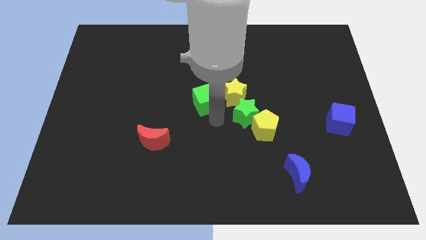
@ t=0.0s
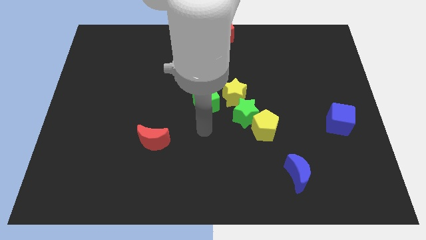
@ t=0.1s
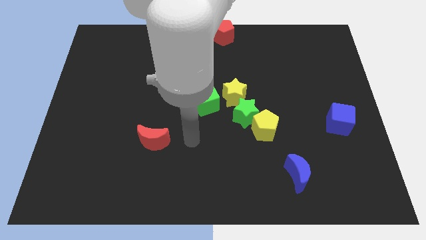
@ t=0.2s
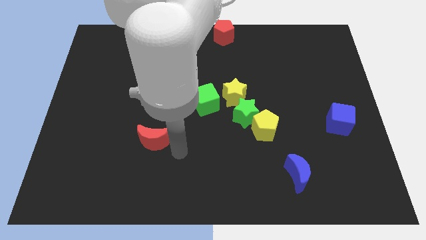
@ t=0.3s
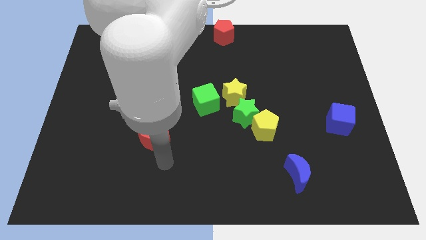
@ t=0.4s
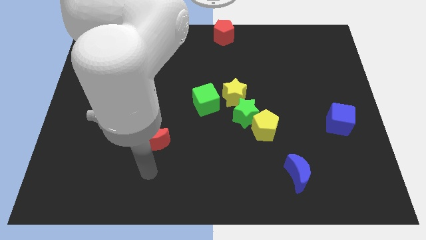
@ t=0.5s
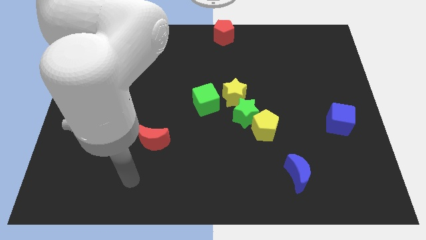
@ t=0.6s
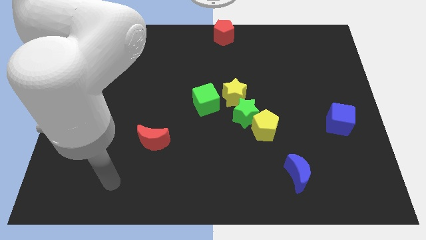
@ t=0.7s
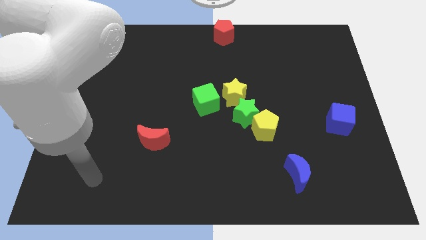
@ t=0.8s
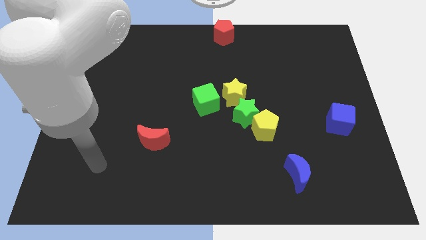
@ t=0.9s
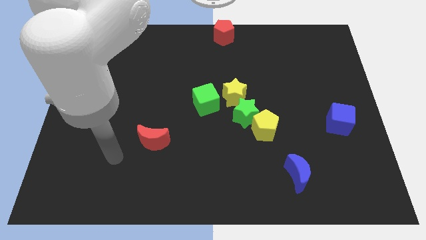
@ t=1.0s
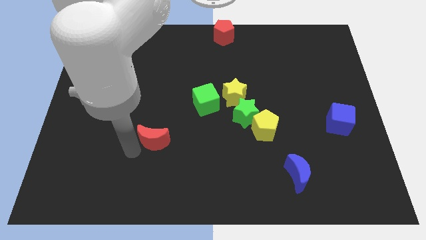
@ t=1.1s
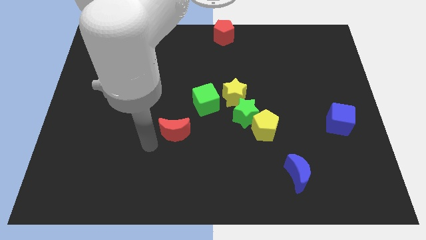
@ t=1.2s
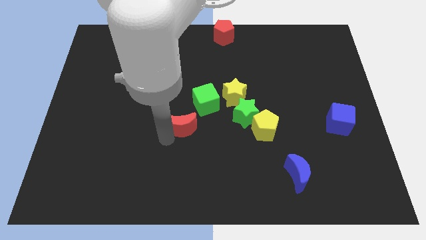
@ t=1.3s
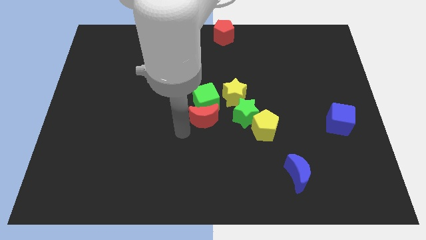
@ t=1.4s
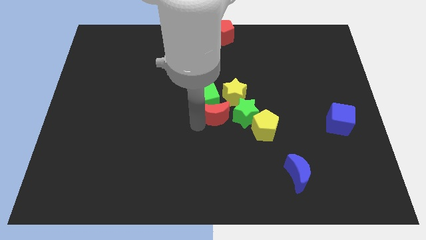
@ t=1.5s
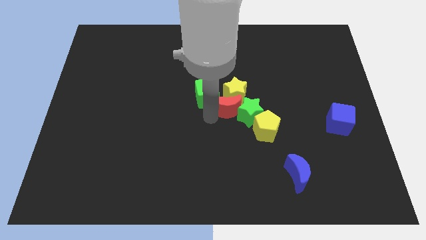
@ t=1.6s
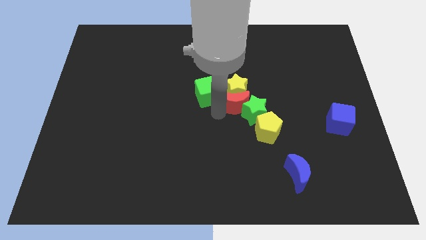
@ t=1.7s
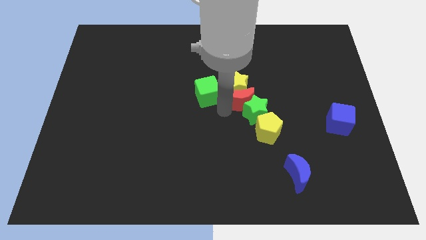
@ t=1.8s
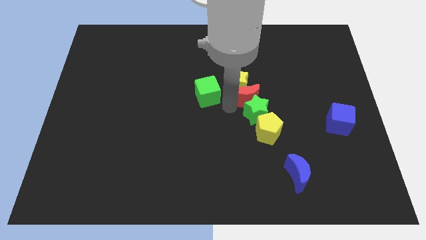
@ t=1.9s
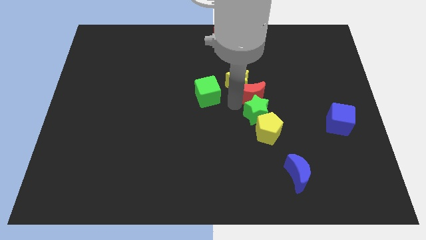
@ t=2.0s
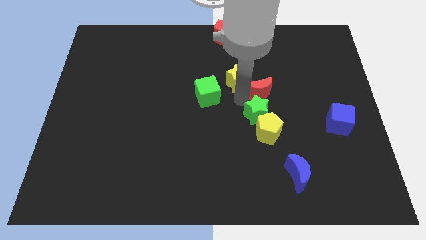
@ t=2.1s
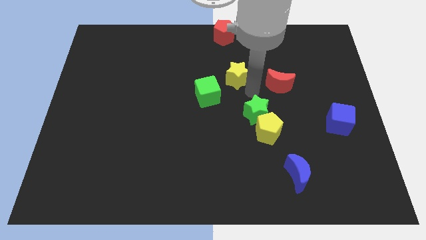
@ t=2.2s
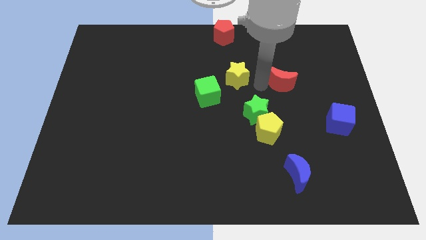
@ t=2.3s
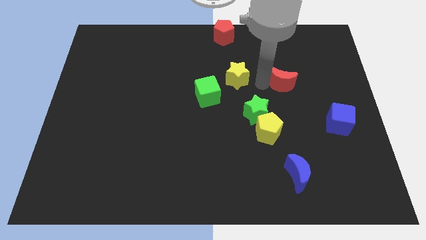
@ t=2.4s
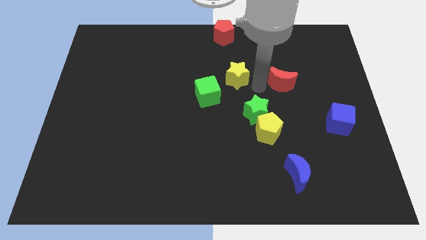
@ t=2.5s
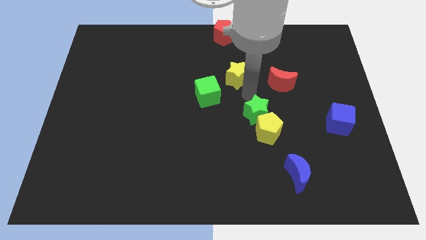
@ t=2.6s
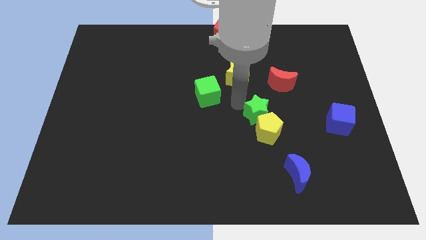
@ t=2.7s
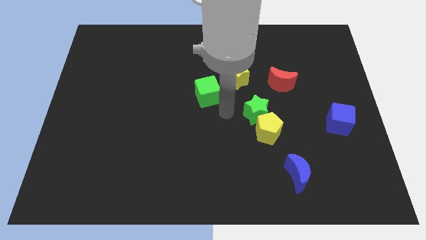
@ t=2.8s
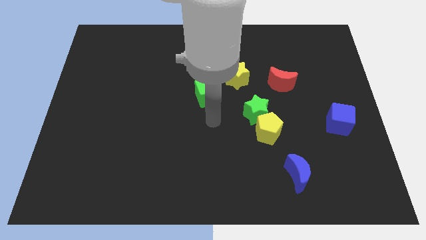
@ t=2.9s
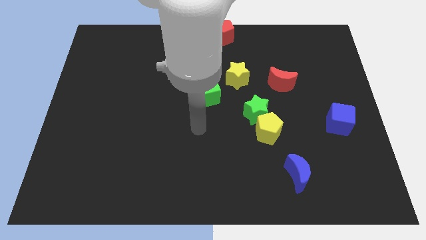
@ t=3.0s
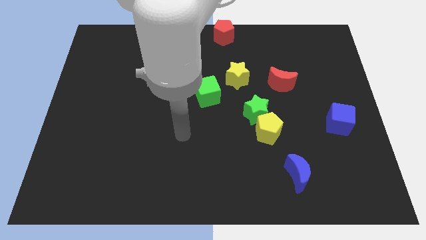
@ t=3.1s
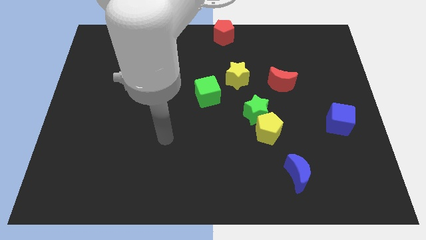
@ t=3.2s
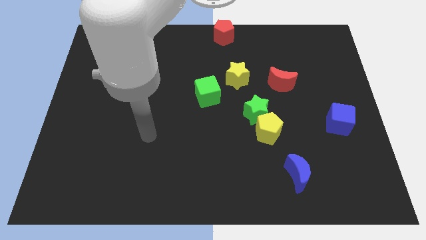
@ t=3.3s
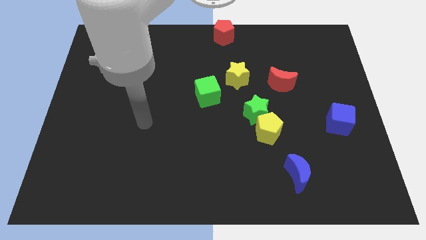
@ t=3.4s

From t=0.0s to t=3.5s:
push the red crescent to the right of the board

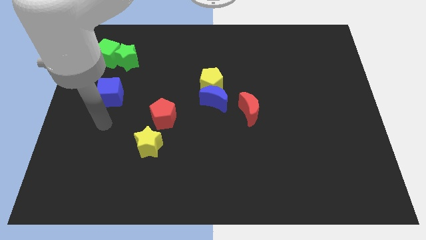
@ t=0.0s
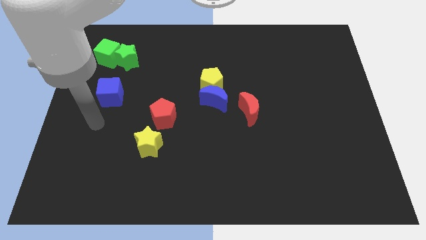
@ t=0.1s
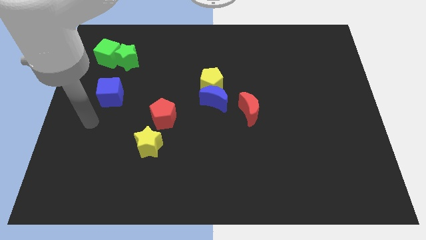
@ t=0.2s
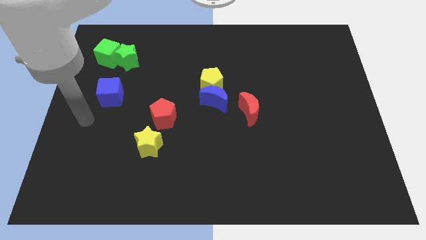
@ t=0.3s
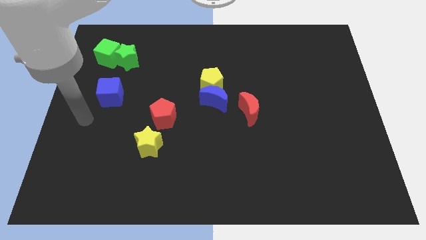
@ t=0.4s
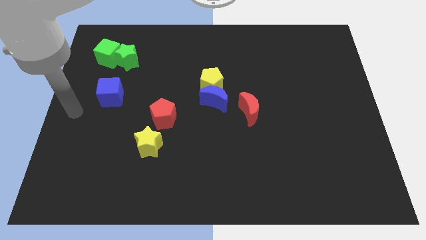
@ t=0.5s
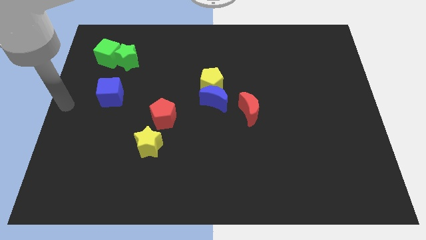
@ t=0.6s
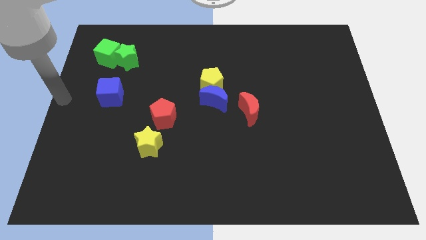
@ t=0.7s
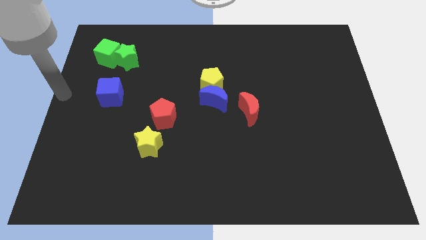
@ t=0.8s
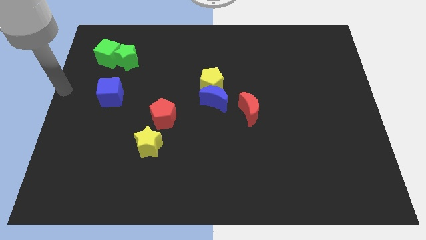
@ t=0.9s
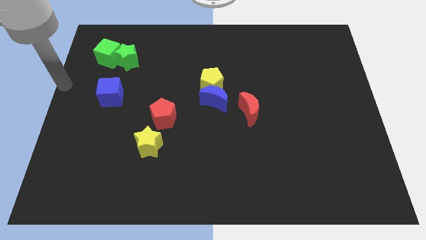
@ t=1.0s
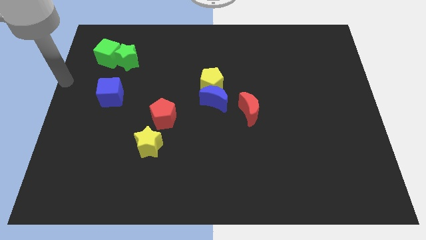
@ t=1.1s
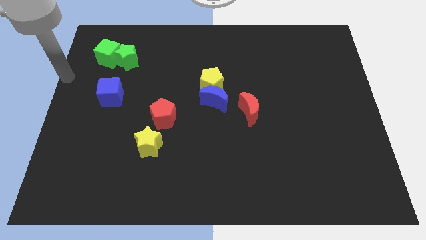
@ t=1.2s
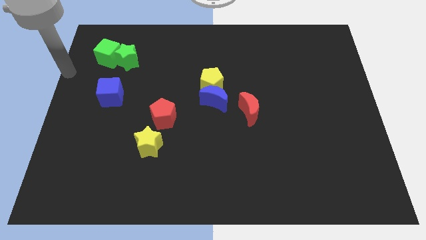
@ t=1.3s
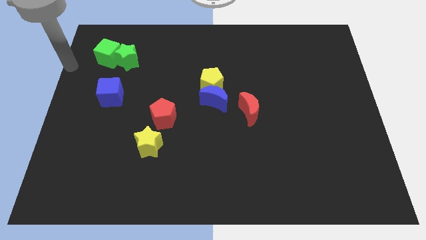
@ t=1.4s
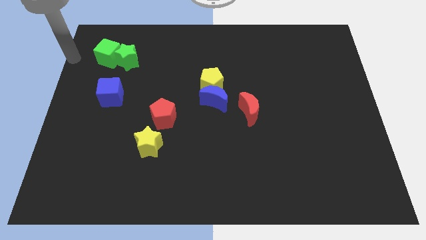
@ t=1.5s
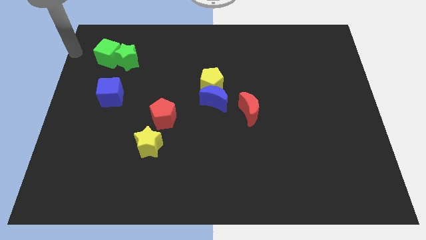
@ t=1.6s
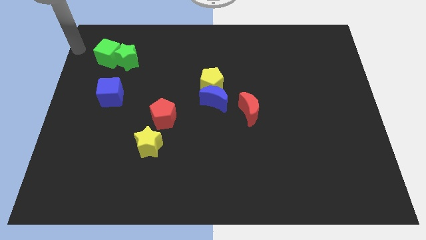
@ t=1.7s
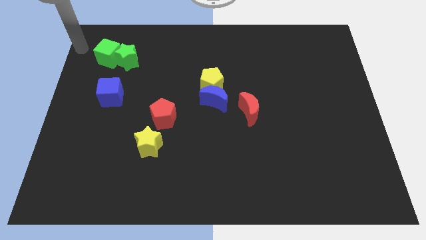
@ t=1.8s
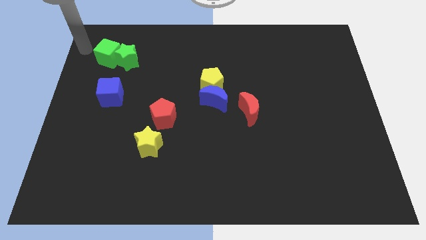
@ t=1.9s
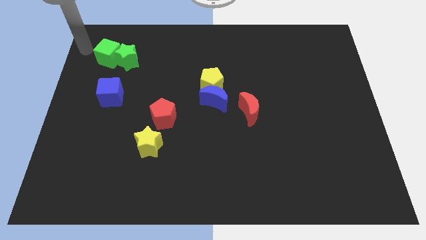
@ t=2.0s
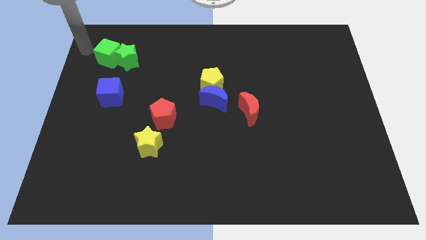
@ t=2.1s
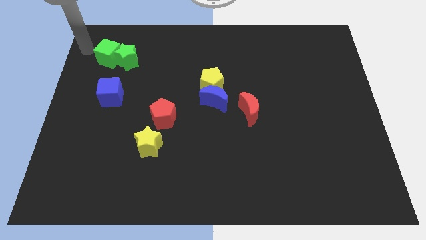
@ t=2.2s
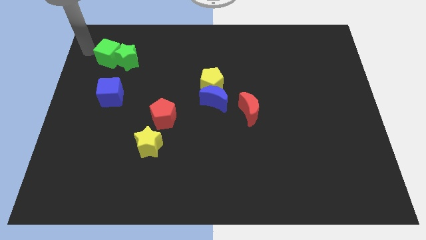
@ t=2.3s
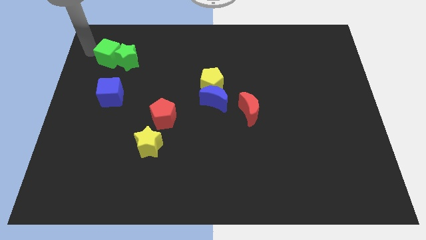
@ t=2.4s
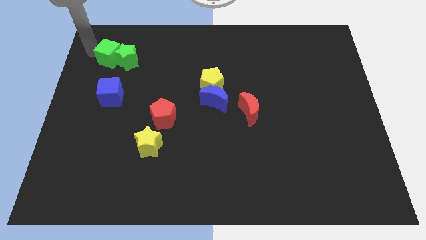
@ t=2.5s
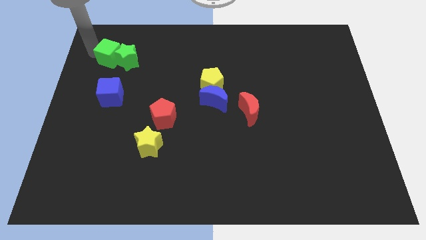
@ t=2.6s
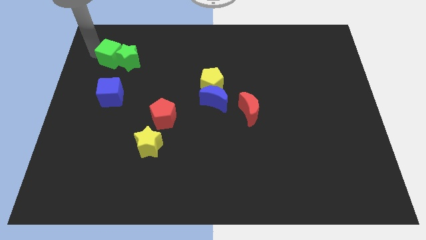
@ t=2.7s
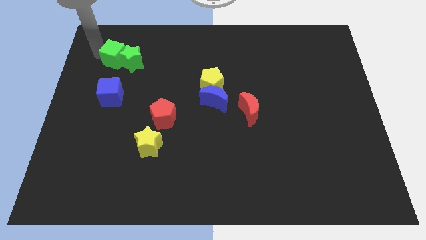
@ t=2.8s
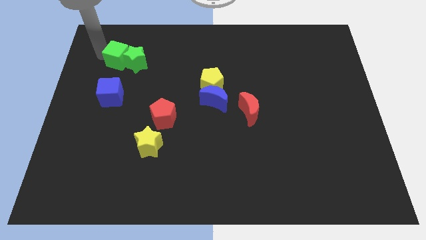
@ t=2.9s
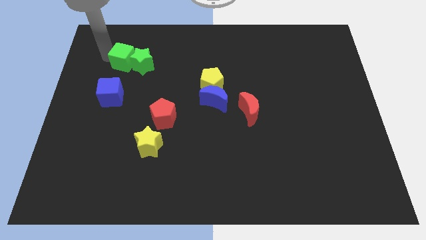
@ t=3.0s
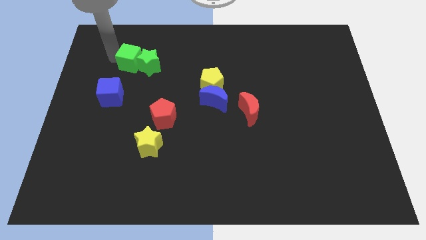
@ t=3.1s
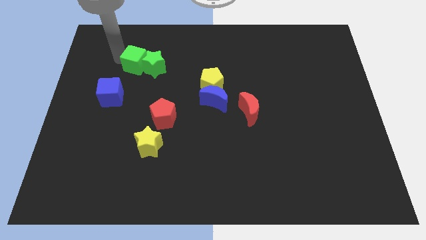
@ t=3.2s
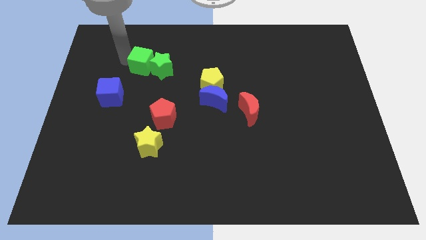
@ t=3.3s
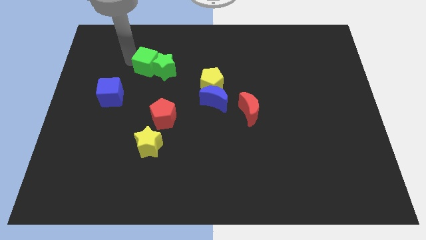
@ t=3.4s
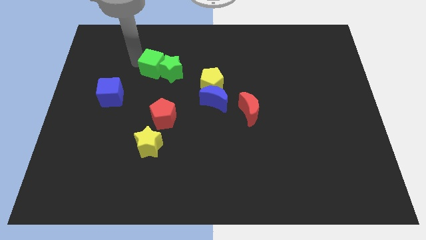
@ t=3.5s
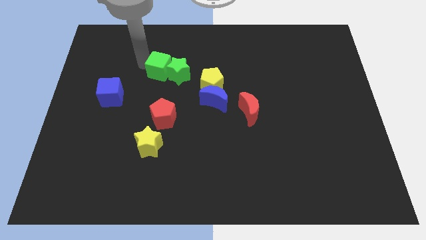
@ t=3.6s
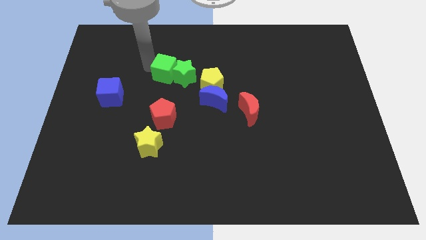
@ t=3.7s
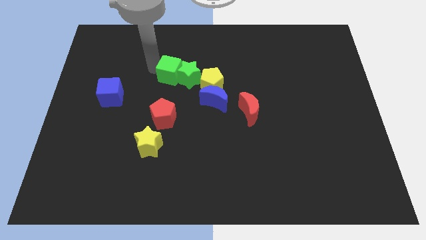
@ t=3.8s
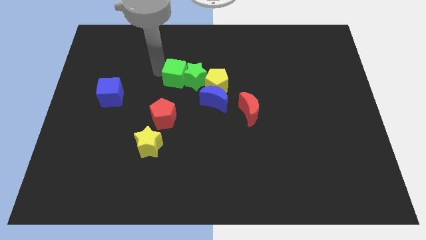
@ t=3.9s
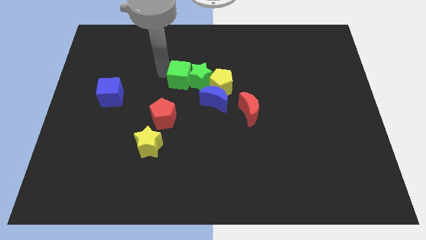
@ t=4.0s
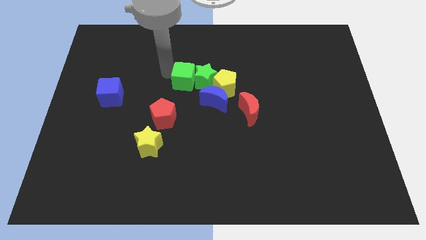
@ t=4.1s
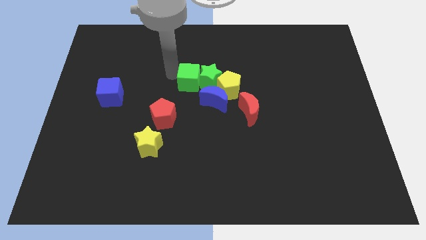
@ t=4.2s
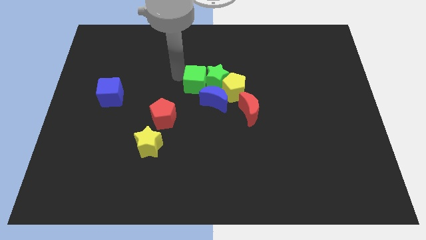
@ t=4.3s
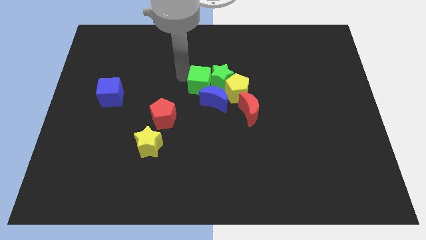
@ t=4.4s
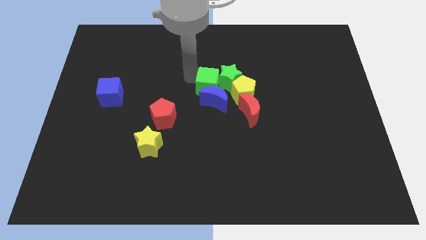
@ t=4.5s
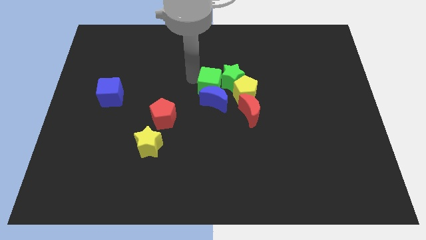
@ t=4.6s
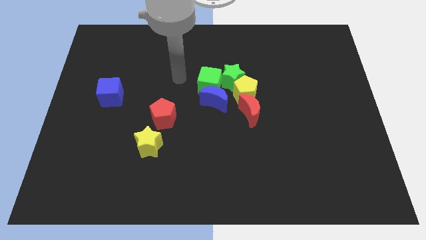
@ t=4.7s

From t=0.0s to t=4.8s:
push the green cube and star into the yellow pentagon

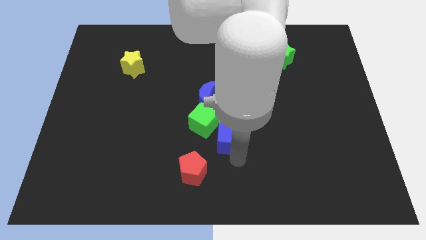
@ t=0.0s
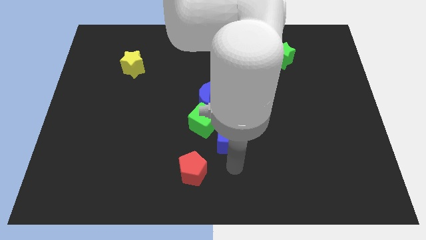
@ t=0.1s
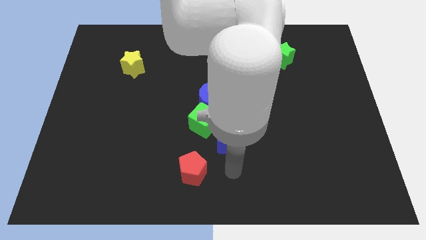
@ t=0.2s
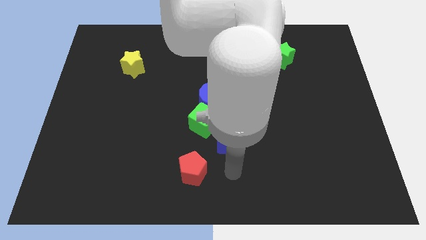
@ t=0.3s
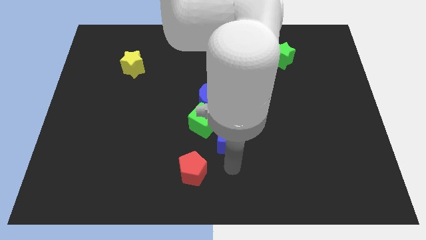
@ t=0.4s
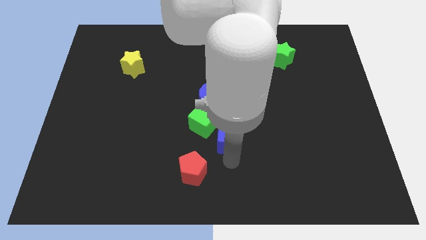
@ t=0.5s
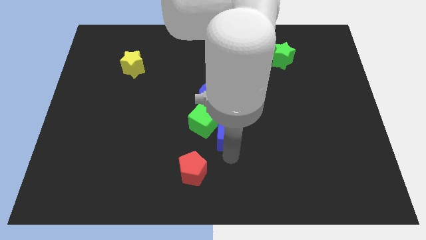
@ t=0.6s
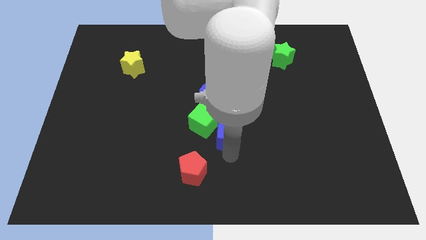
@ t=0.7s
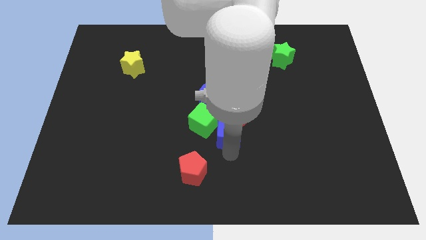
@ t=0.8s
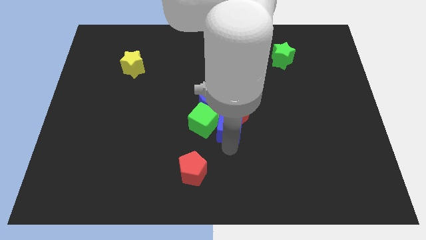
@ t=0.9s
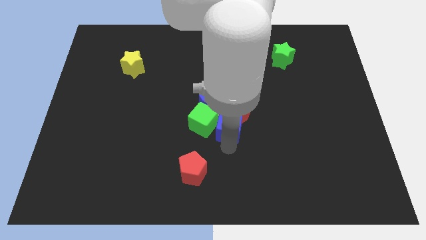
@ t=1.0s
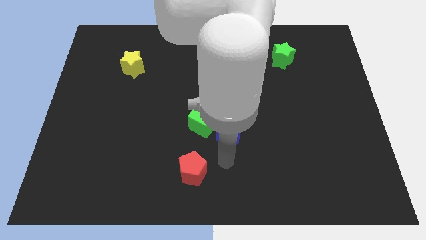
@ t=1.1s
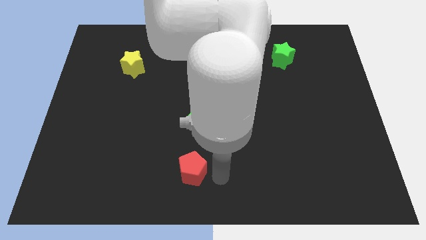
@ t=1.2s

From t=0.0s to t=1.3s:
push the blue cube into the group of blocks
